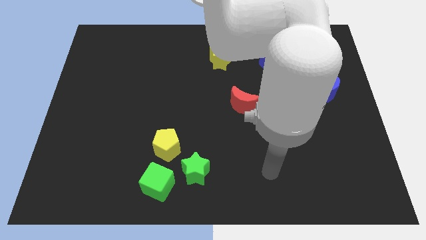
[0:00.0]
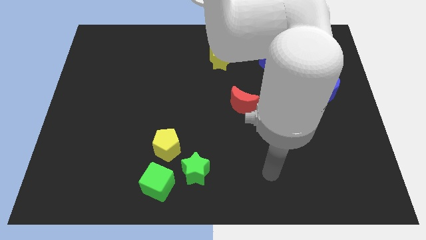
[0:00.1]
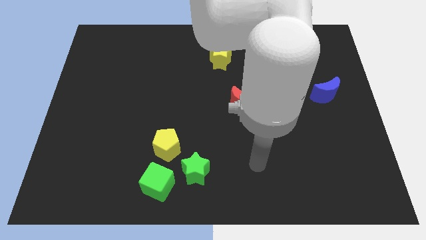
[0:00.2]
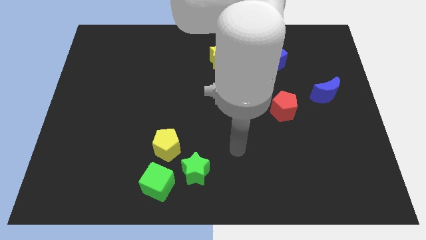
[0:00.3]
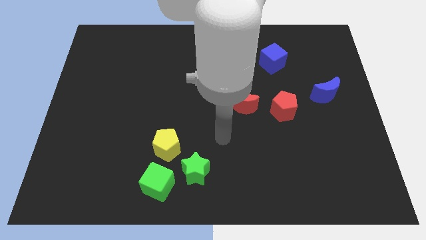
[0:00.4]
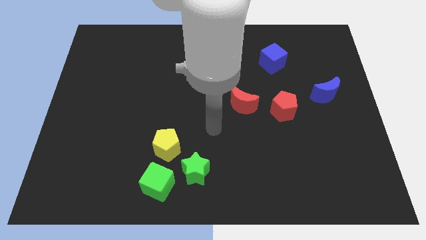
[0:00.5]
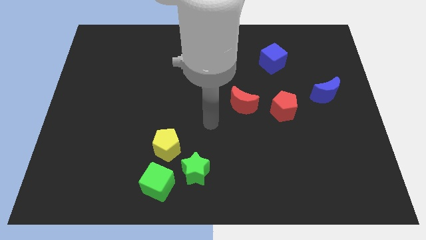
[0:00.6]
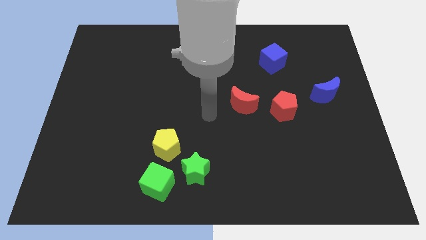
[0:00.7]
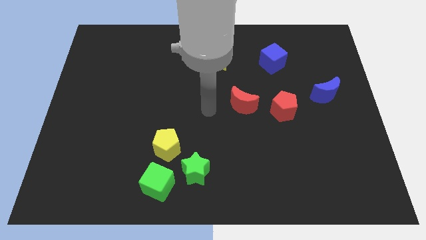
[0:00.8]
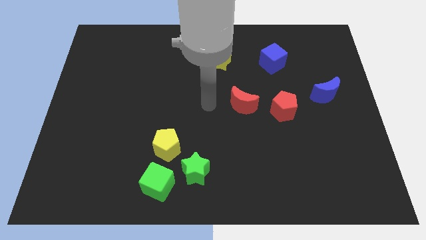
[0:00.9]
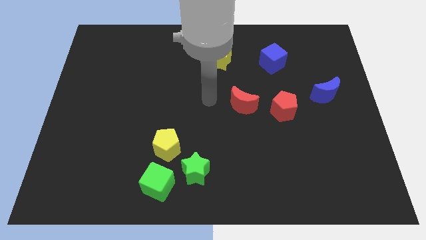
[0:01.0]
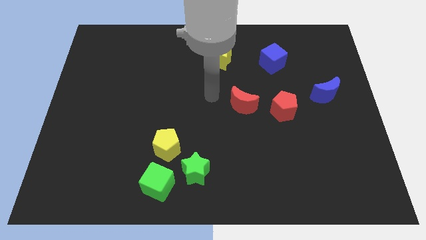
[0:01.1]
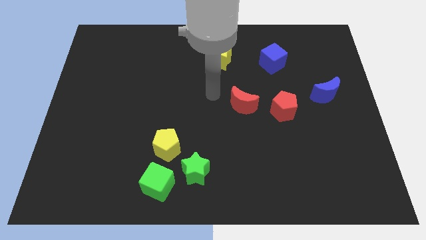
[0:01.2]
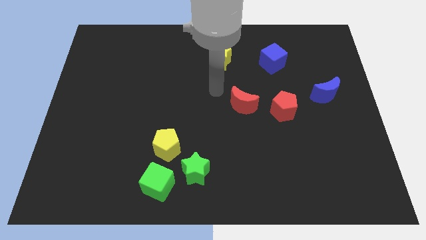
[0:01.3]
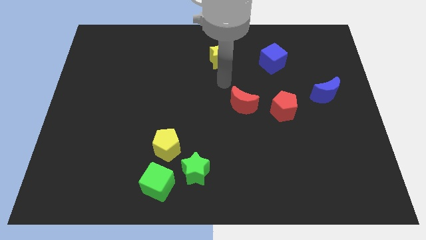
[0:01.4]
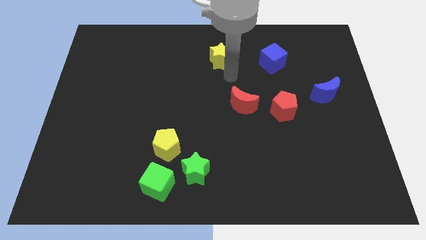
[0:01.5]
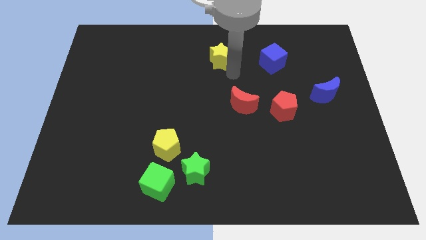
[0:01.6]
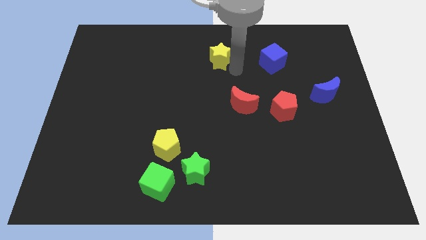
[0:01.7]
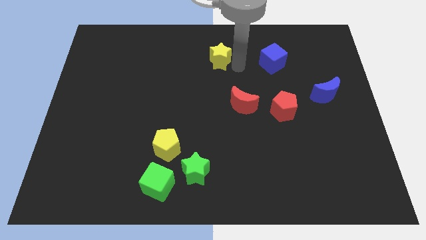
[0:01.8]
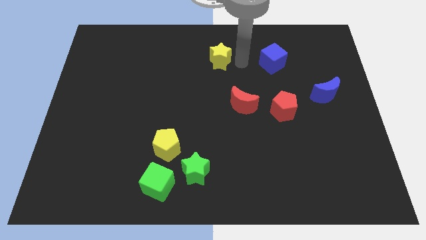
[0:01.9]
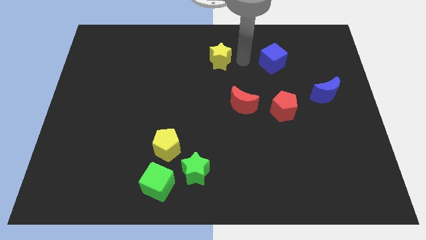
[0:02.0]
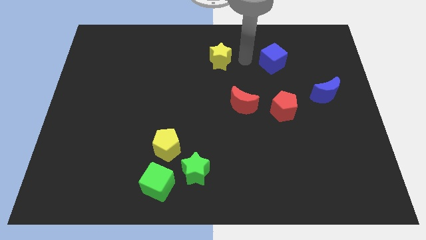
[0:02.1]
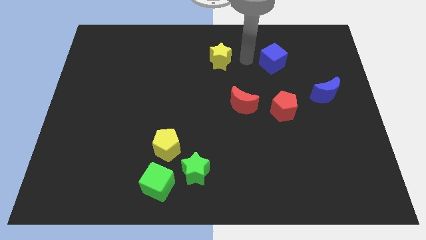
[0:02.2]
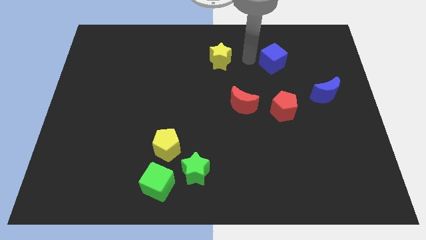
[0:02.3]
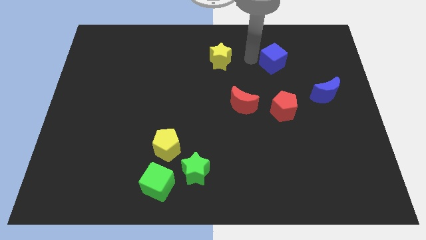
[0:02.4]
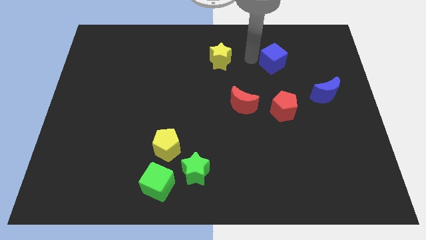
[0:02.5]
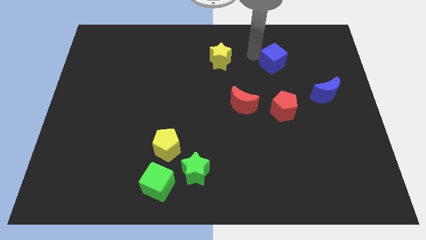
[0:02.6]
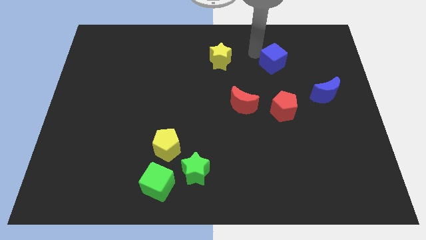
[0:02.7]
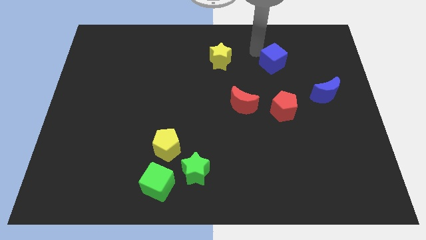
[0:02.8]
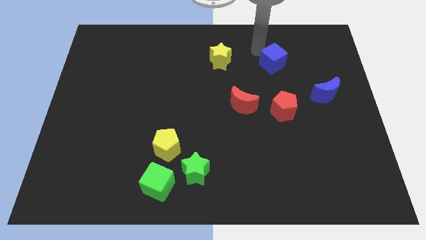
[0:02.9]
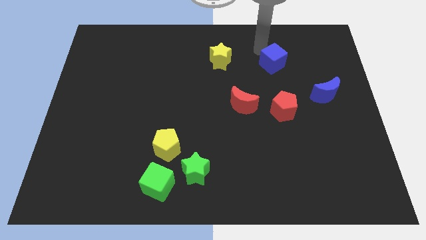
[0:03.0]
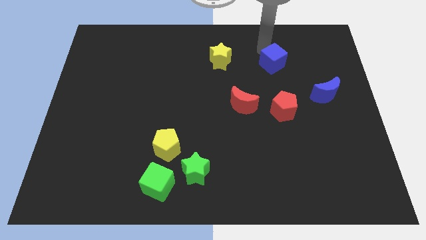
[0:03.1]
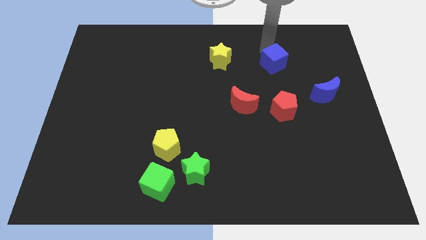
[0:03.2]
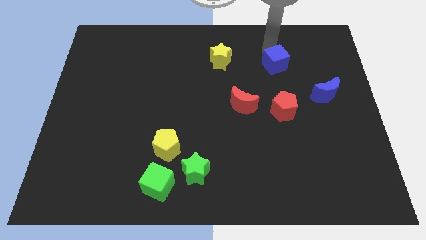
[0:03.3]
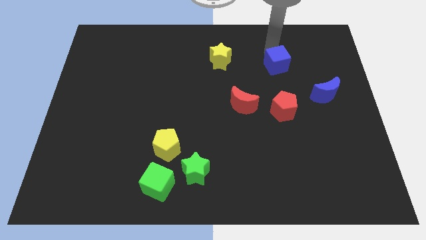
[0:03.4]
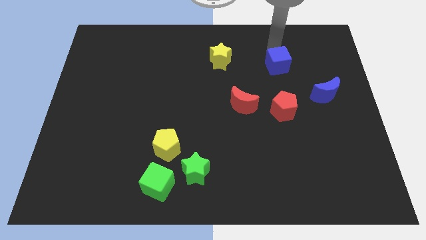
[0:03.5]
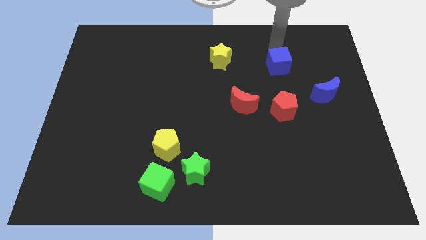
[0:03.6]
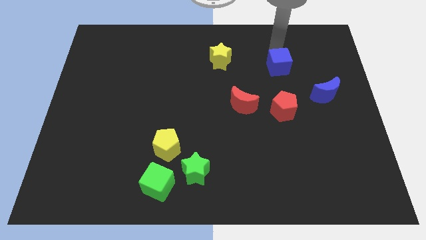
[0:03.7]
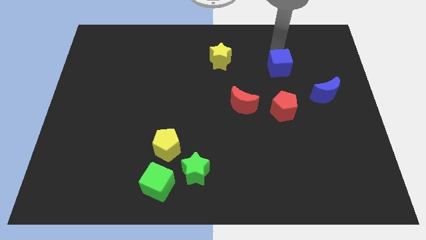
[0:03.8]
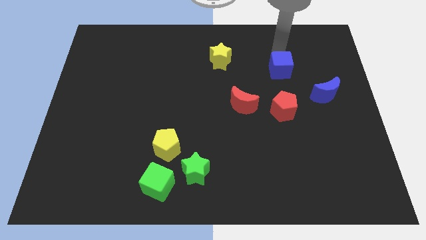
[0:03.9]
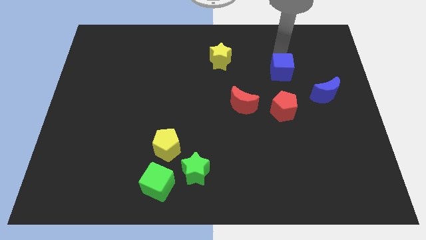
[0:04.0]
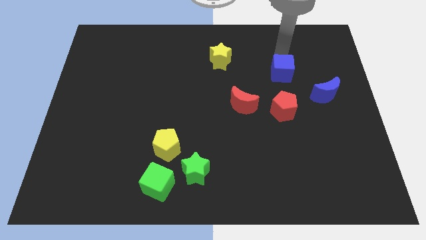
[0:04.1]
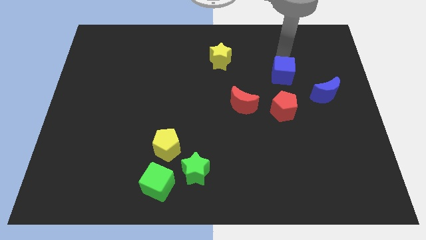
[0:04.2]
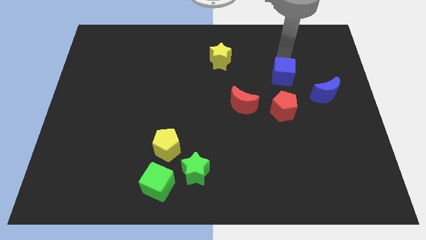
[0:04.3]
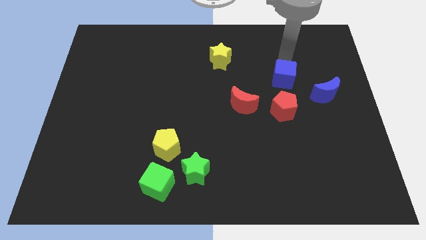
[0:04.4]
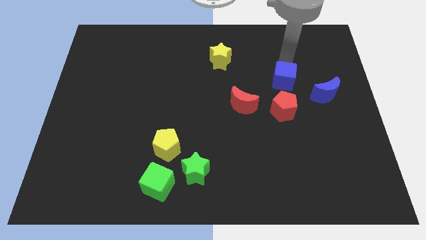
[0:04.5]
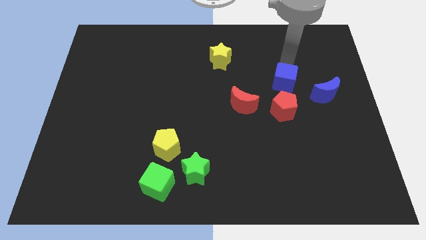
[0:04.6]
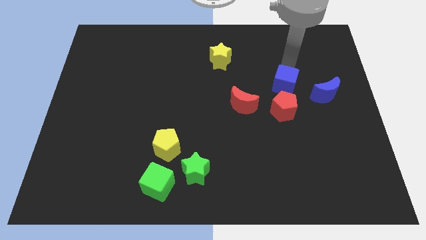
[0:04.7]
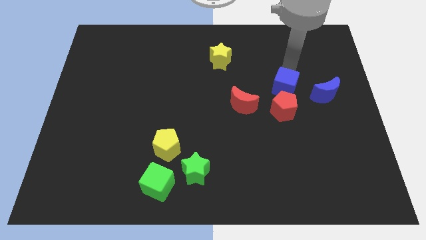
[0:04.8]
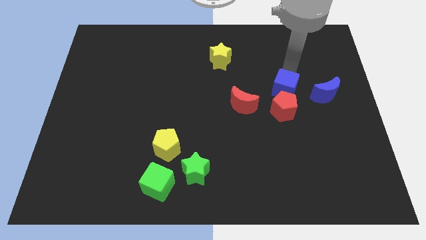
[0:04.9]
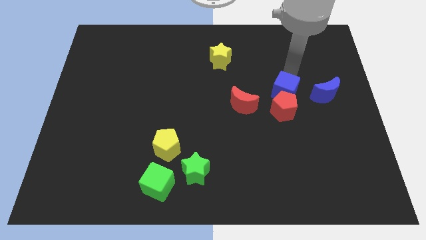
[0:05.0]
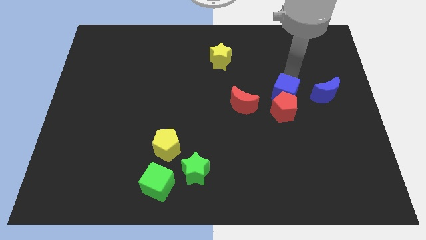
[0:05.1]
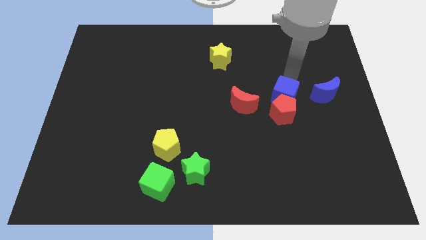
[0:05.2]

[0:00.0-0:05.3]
push the blue cube towards the red pentagon

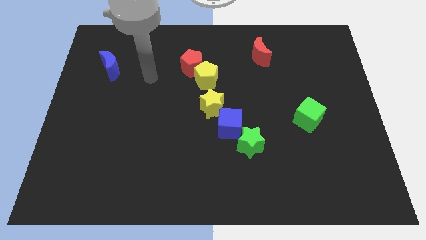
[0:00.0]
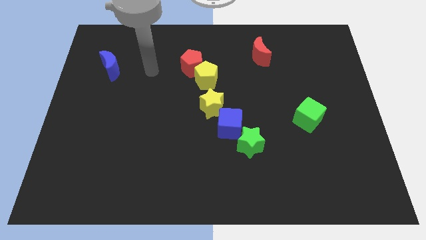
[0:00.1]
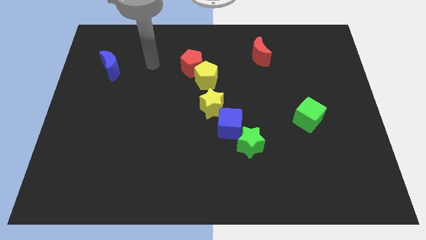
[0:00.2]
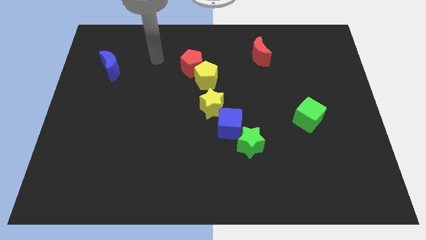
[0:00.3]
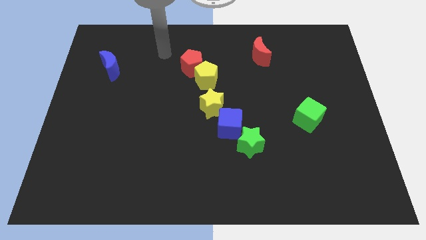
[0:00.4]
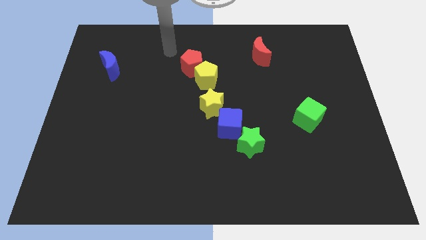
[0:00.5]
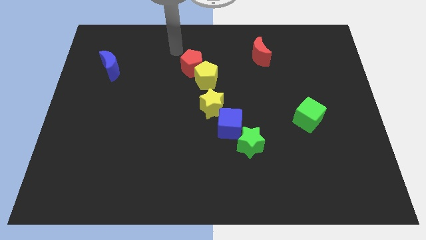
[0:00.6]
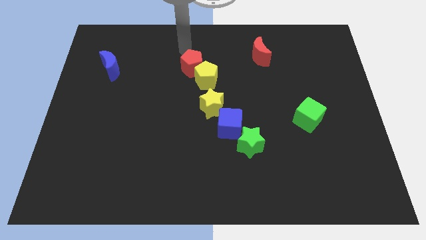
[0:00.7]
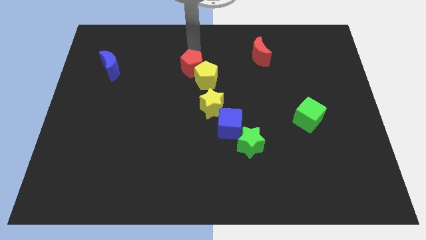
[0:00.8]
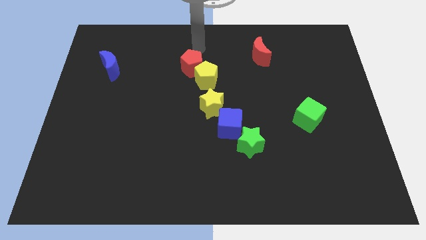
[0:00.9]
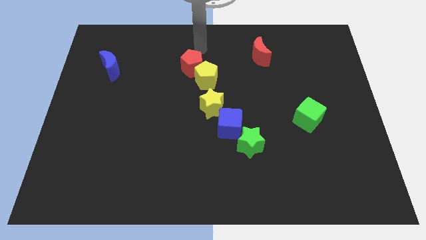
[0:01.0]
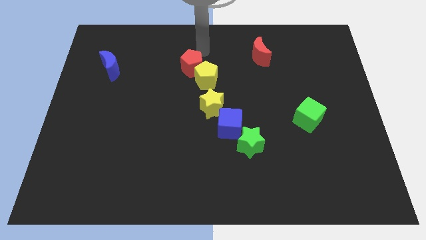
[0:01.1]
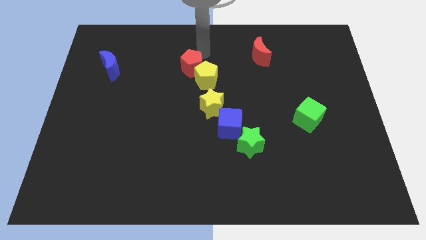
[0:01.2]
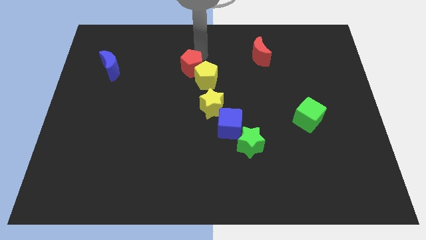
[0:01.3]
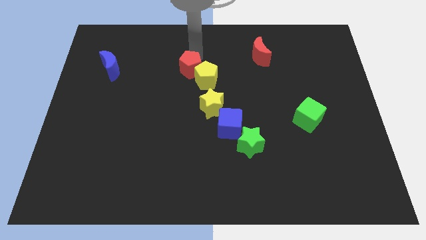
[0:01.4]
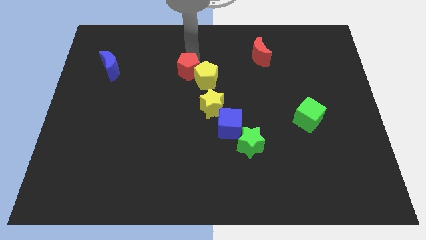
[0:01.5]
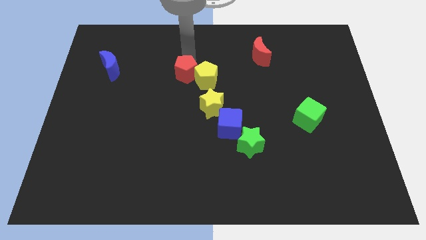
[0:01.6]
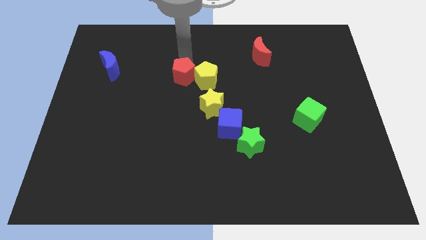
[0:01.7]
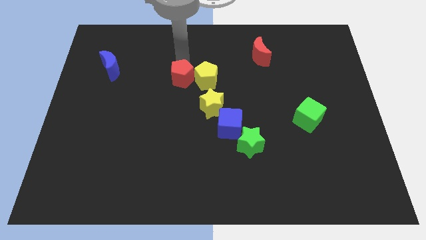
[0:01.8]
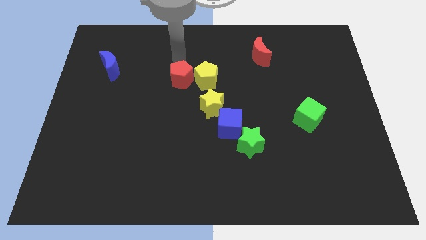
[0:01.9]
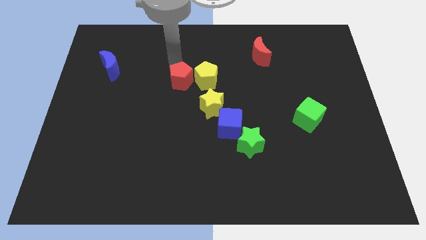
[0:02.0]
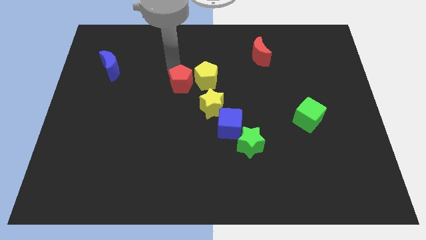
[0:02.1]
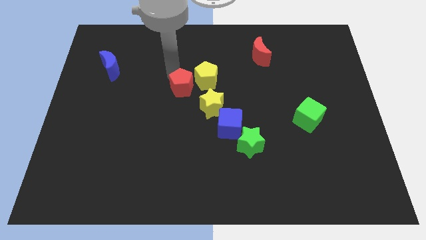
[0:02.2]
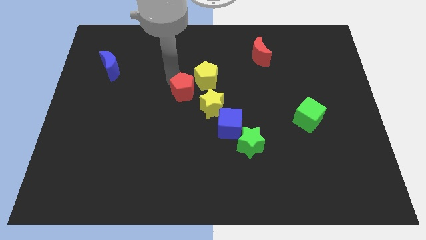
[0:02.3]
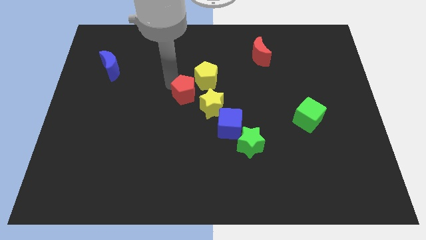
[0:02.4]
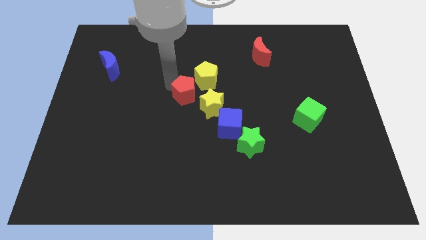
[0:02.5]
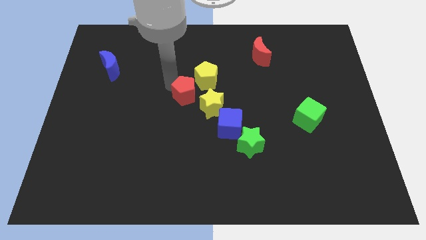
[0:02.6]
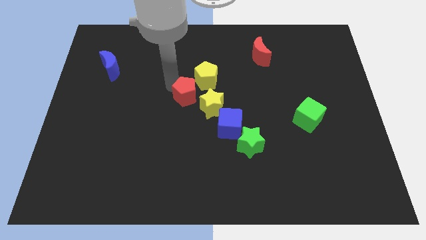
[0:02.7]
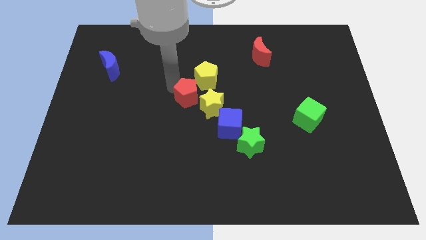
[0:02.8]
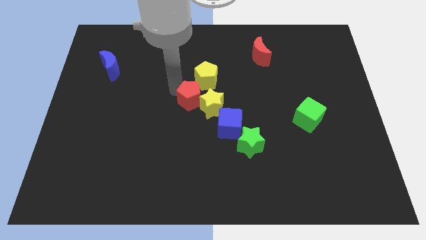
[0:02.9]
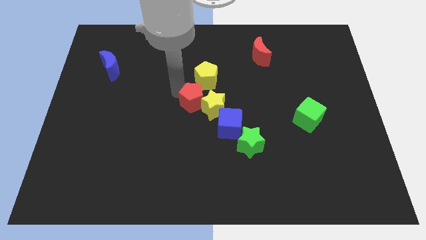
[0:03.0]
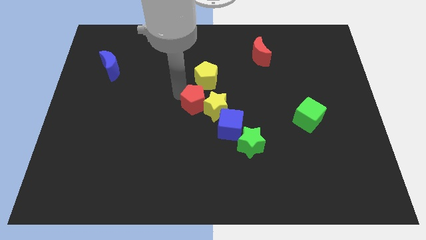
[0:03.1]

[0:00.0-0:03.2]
push the red pentagon towards the yellow star
